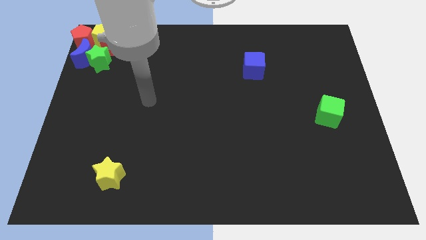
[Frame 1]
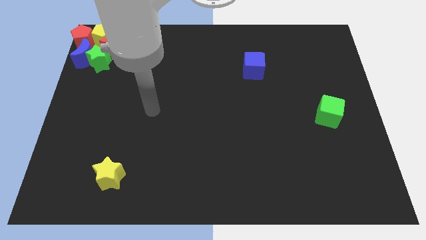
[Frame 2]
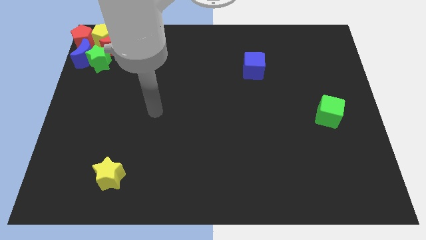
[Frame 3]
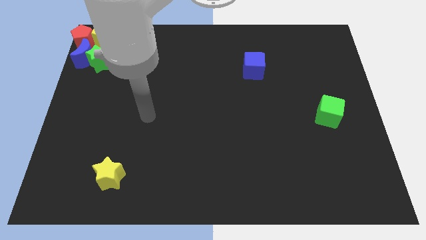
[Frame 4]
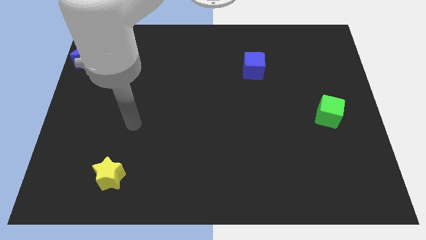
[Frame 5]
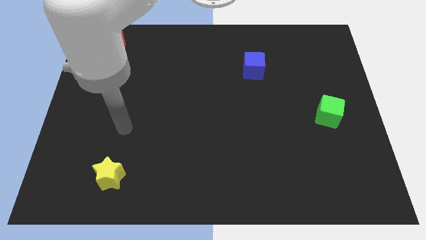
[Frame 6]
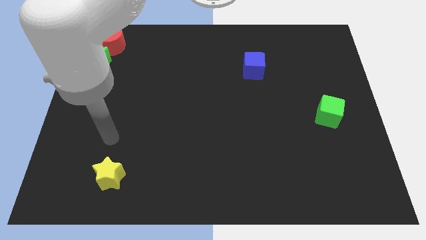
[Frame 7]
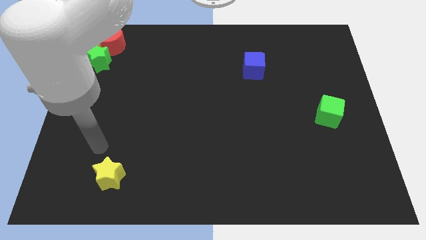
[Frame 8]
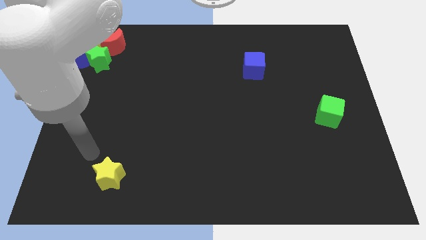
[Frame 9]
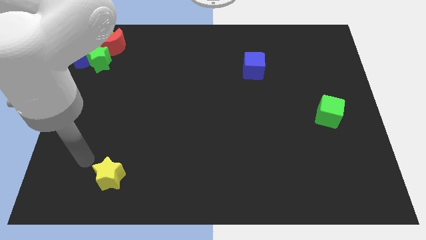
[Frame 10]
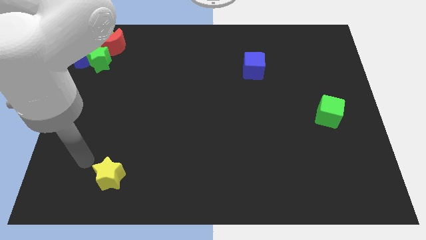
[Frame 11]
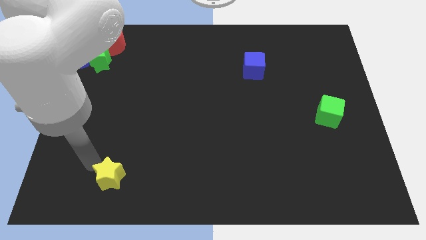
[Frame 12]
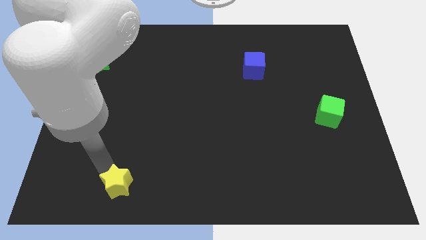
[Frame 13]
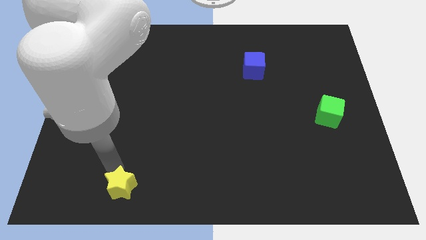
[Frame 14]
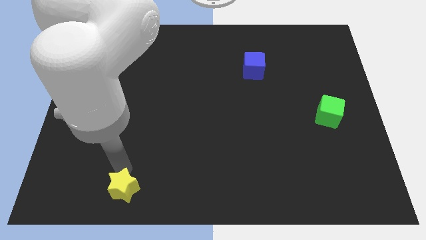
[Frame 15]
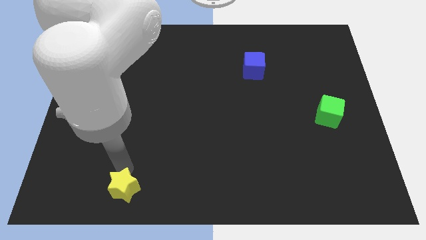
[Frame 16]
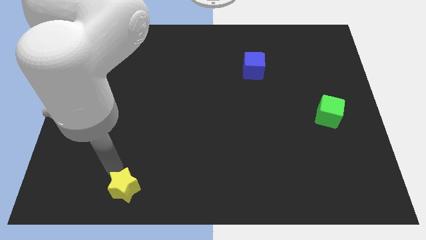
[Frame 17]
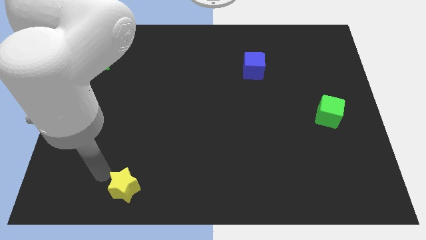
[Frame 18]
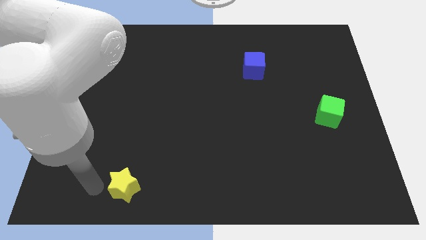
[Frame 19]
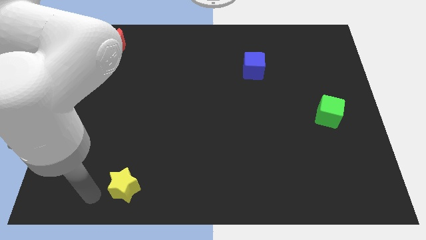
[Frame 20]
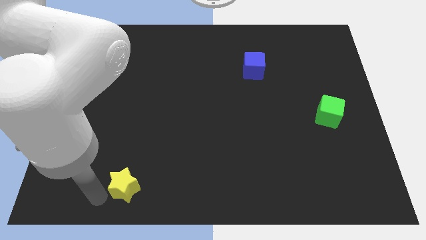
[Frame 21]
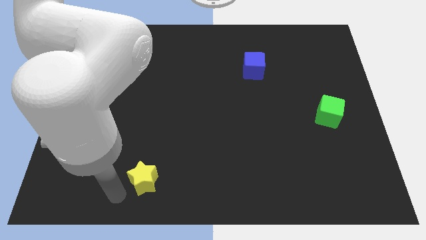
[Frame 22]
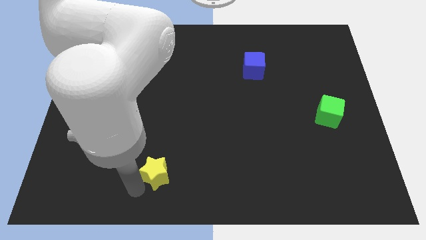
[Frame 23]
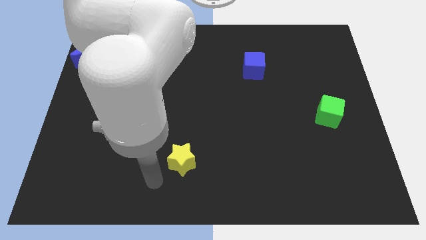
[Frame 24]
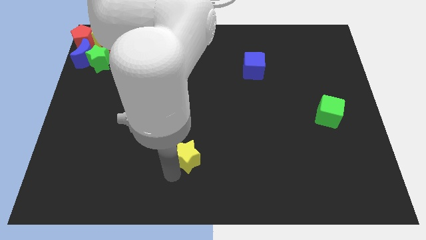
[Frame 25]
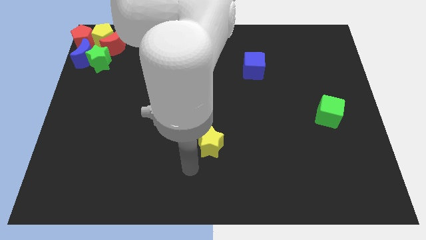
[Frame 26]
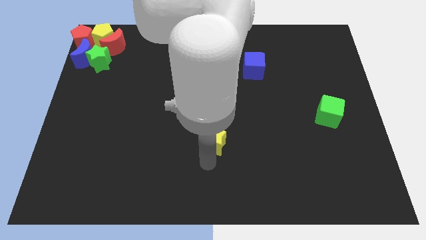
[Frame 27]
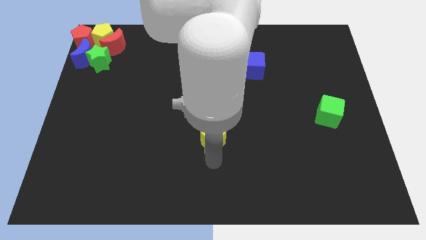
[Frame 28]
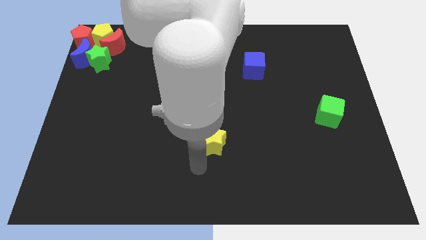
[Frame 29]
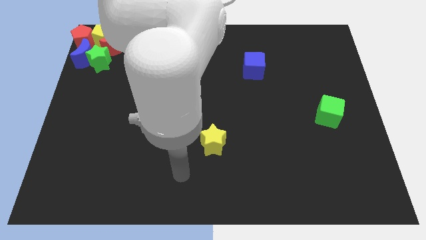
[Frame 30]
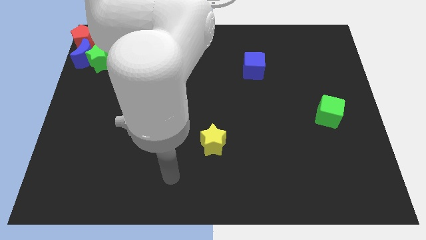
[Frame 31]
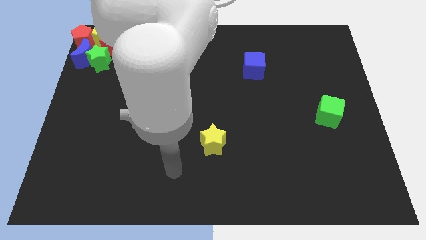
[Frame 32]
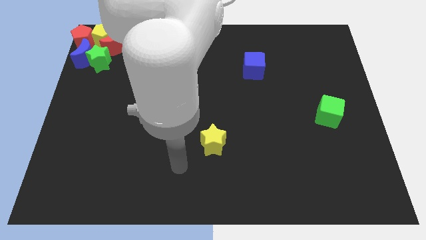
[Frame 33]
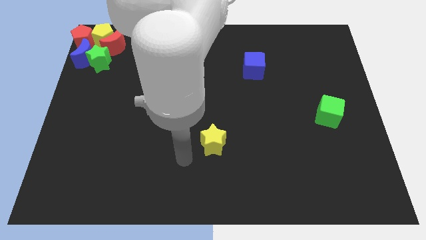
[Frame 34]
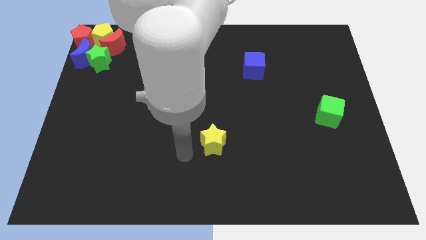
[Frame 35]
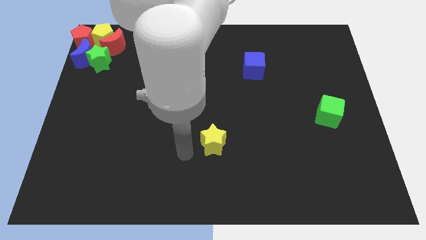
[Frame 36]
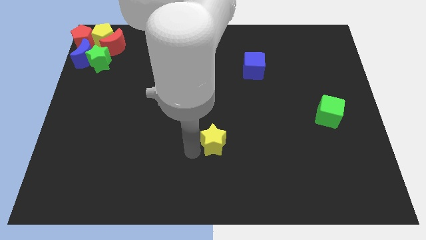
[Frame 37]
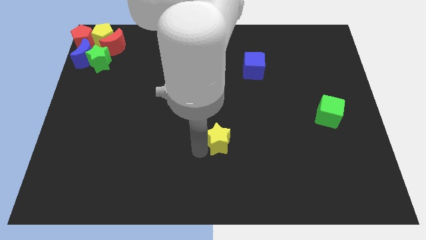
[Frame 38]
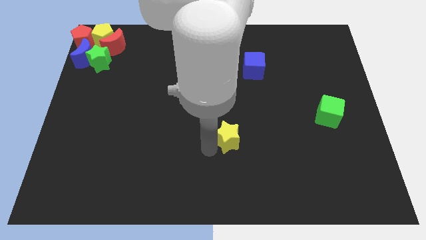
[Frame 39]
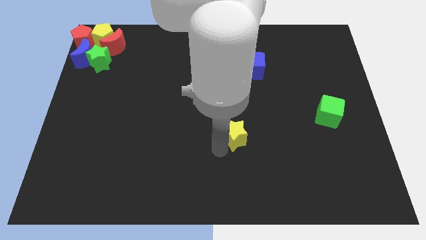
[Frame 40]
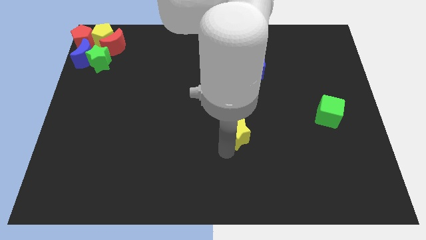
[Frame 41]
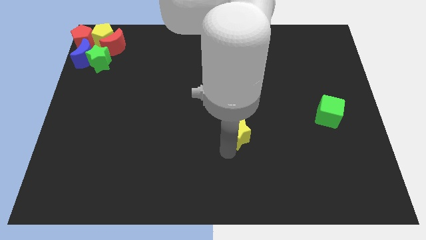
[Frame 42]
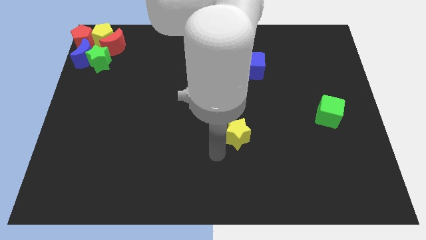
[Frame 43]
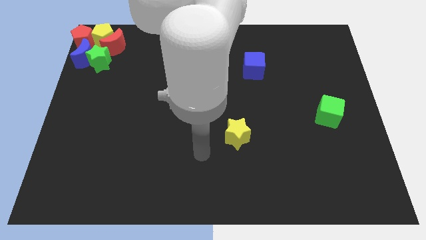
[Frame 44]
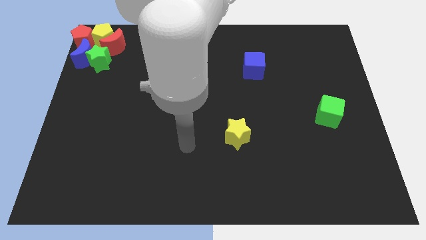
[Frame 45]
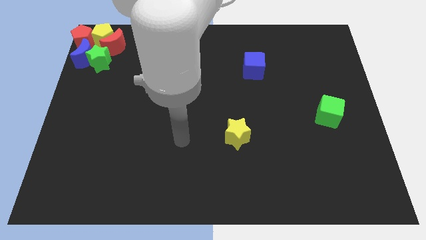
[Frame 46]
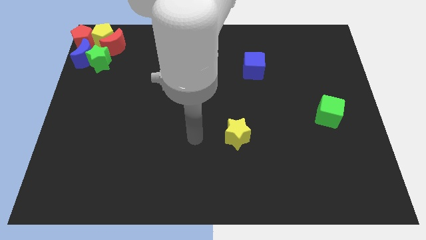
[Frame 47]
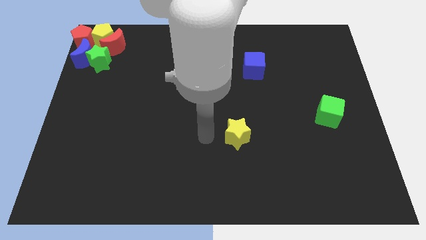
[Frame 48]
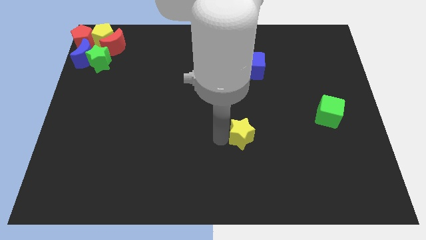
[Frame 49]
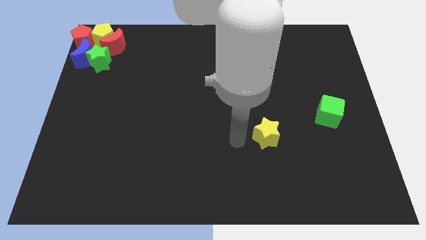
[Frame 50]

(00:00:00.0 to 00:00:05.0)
push the yellow star towards the center right

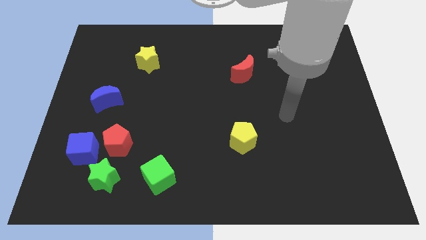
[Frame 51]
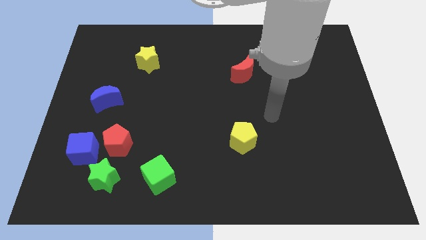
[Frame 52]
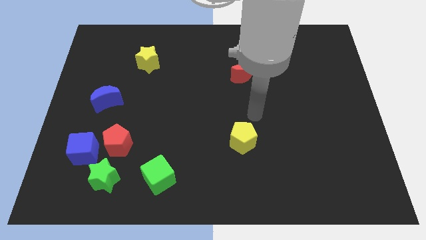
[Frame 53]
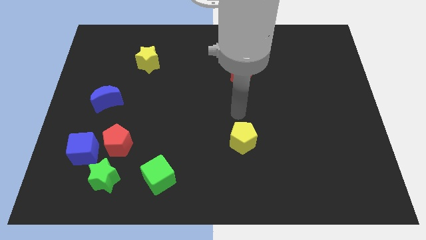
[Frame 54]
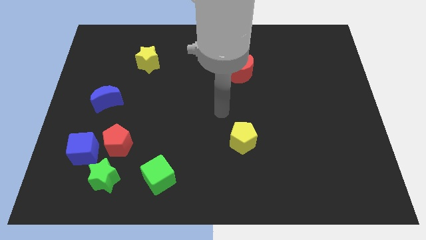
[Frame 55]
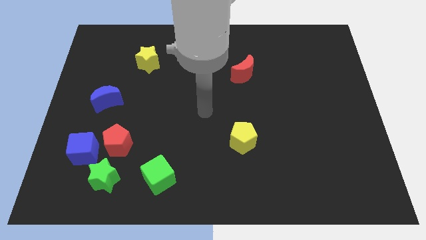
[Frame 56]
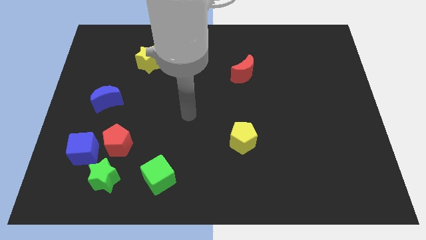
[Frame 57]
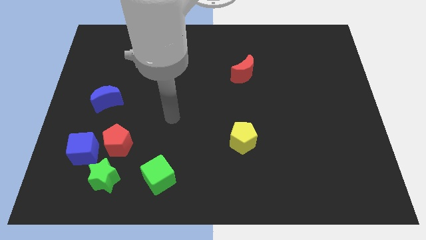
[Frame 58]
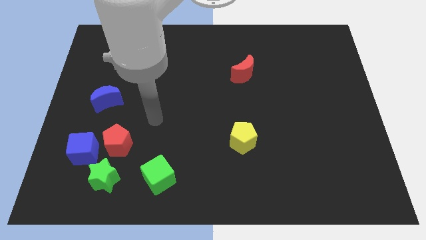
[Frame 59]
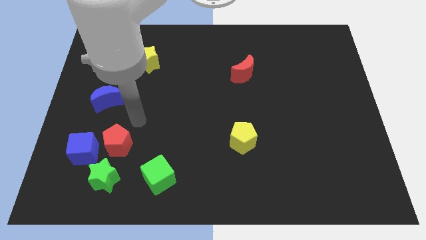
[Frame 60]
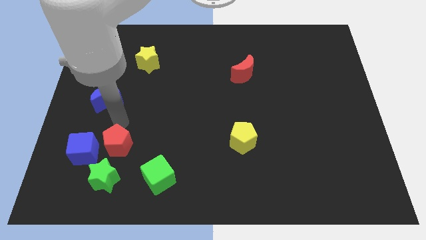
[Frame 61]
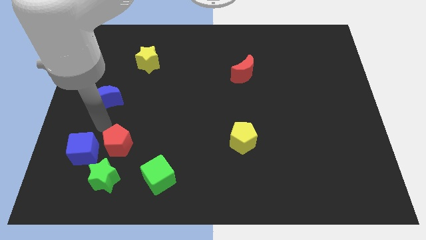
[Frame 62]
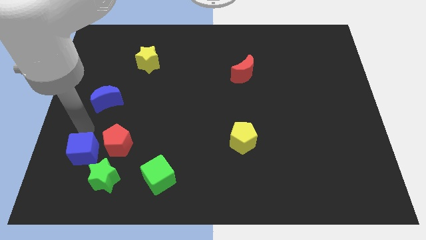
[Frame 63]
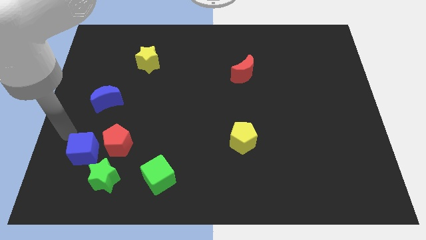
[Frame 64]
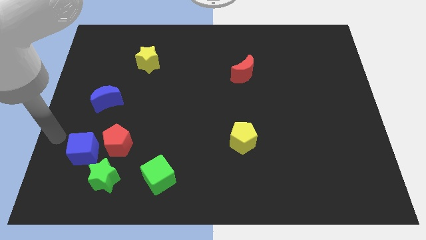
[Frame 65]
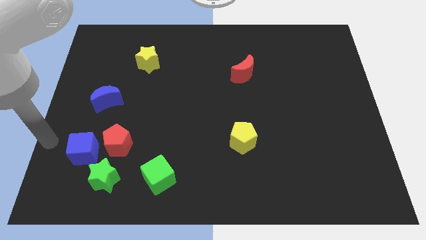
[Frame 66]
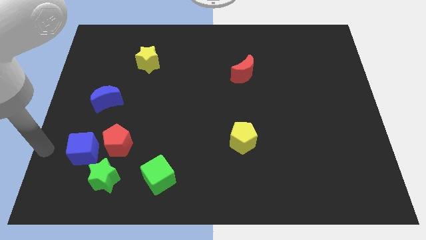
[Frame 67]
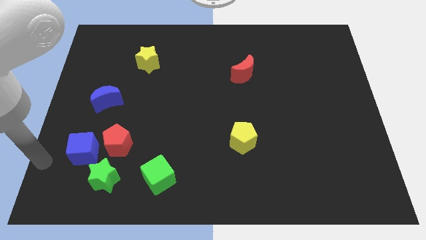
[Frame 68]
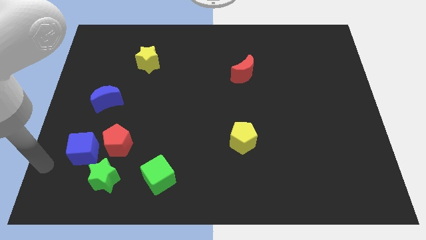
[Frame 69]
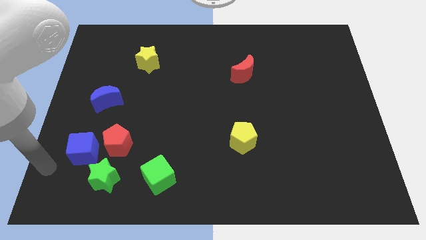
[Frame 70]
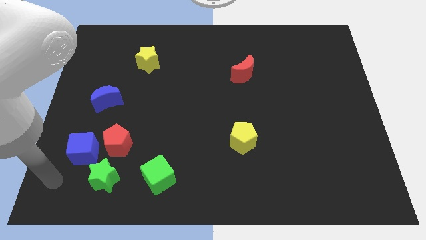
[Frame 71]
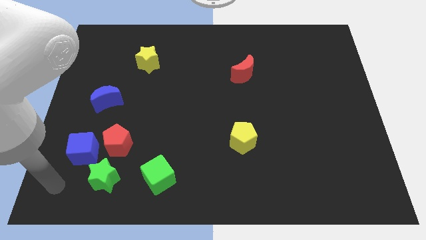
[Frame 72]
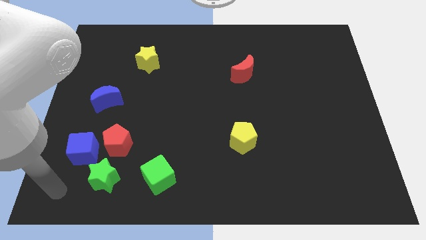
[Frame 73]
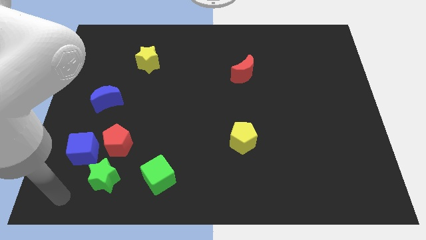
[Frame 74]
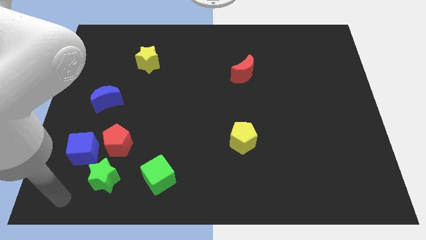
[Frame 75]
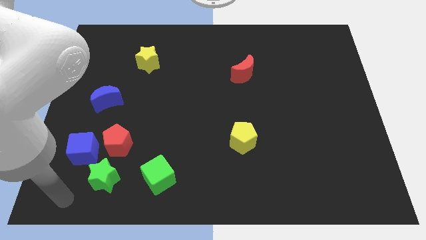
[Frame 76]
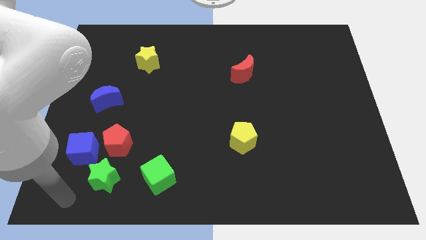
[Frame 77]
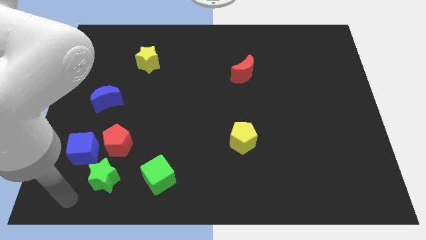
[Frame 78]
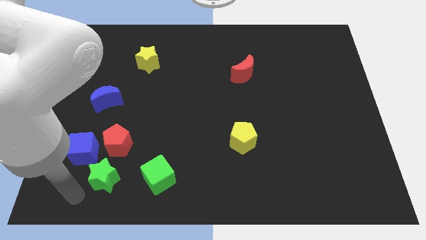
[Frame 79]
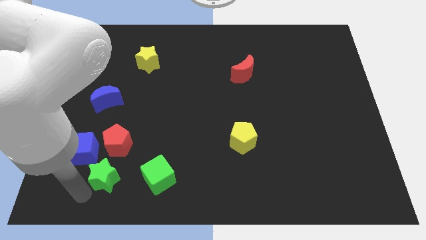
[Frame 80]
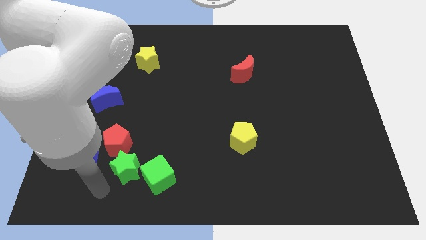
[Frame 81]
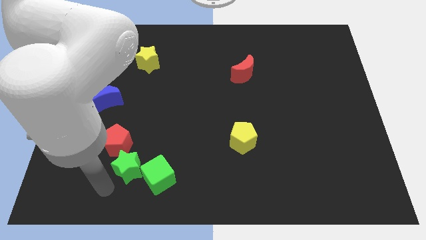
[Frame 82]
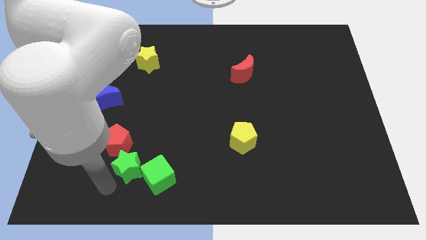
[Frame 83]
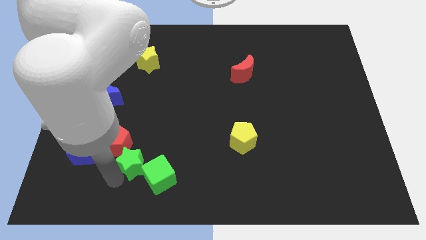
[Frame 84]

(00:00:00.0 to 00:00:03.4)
slightly move your arm into the green star

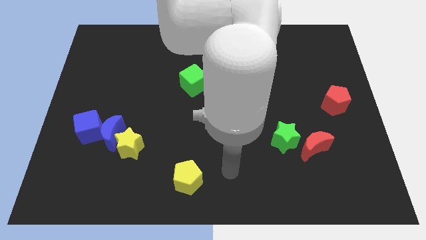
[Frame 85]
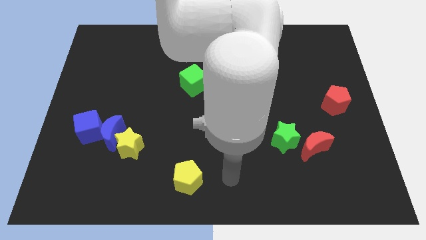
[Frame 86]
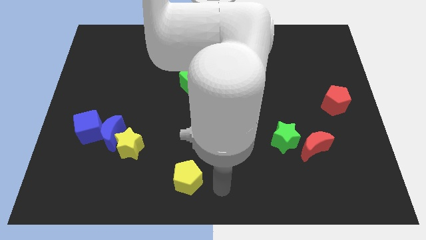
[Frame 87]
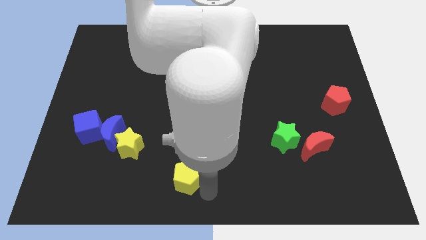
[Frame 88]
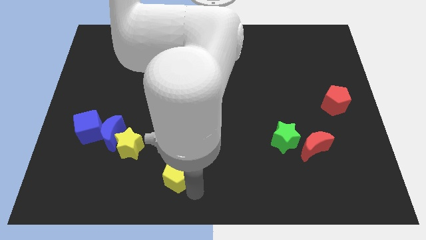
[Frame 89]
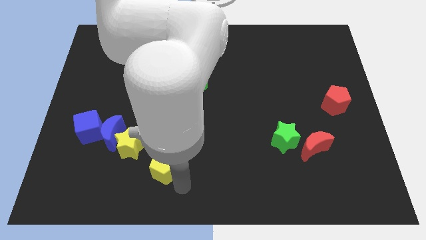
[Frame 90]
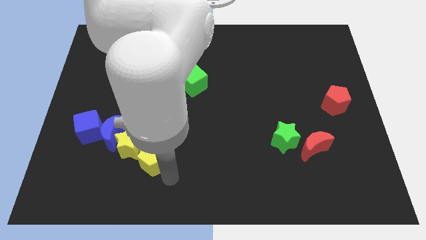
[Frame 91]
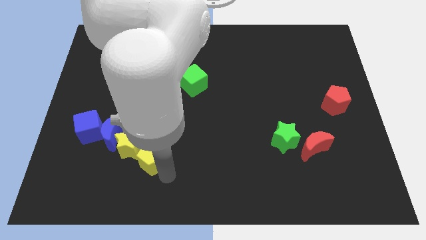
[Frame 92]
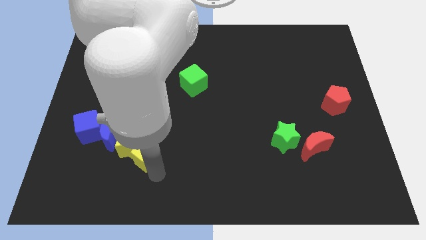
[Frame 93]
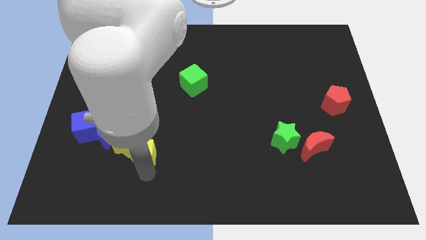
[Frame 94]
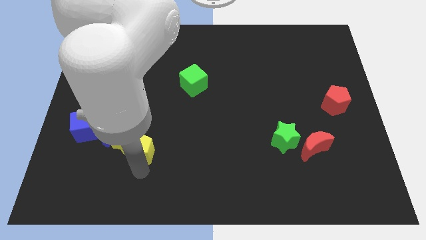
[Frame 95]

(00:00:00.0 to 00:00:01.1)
push the yellow pentagon into yellow star
